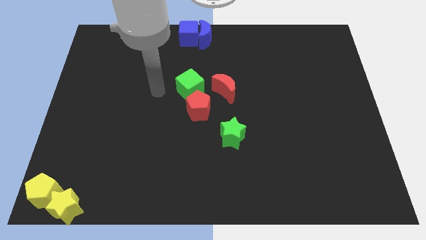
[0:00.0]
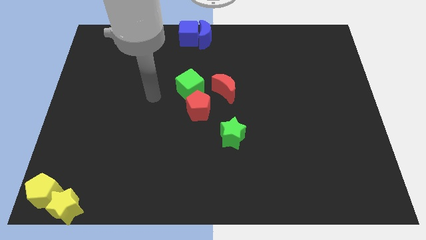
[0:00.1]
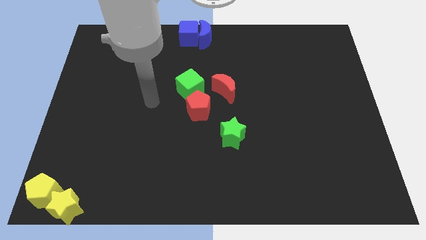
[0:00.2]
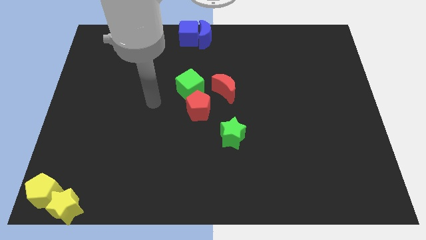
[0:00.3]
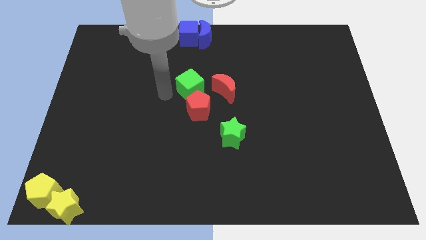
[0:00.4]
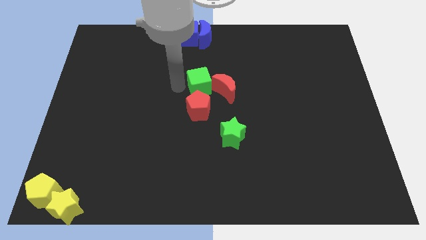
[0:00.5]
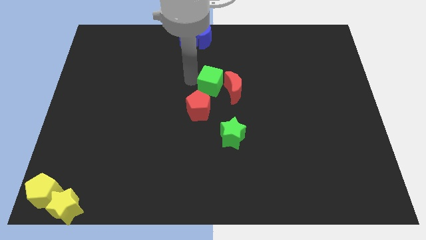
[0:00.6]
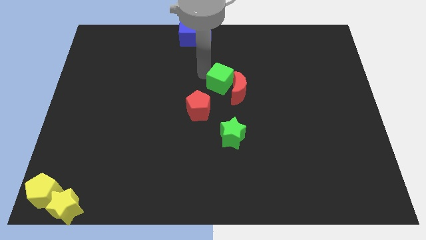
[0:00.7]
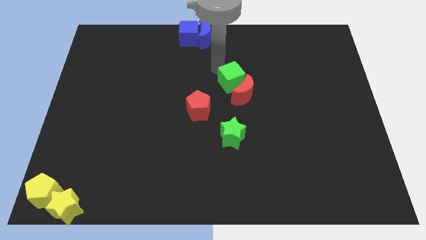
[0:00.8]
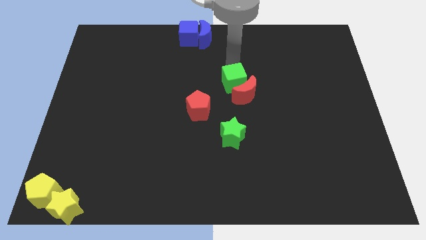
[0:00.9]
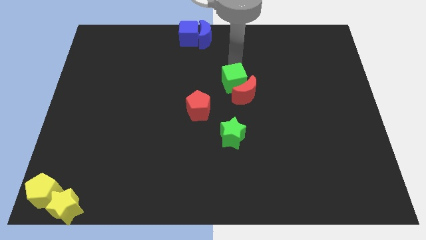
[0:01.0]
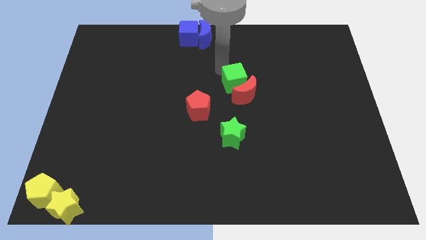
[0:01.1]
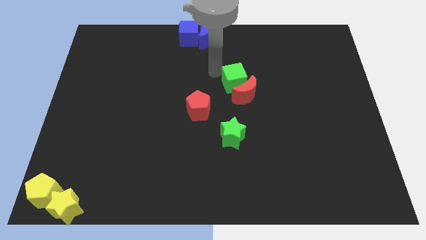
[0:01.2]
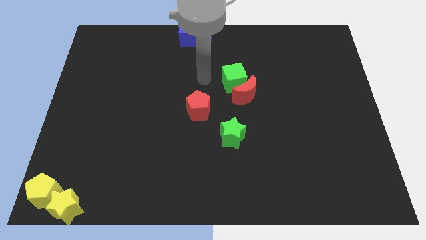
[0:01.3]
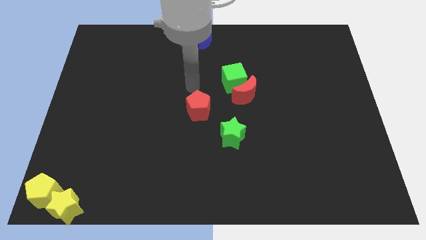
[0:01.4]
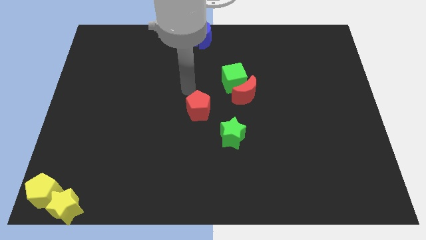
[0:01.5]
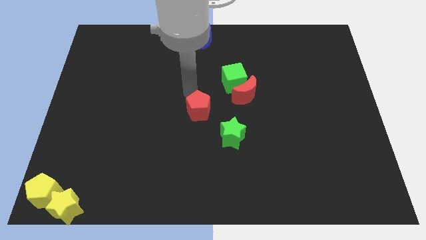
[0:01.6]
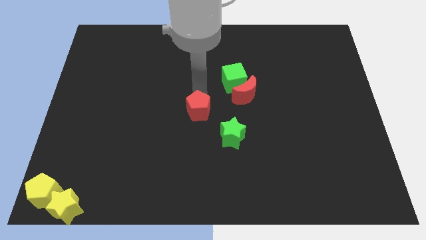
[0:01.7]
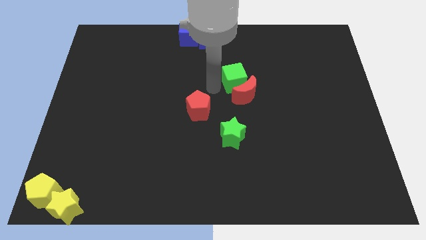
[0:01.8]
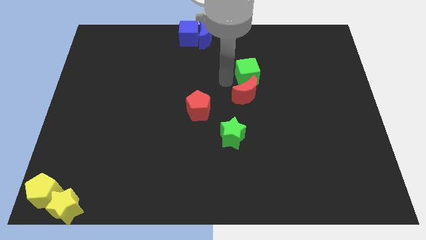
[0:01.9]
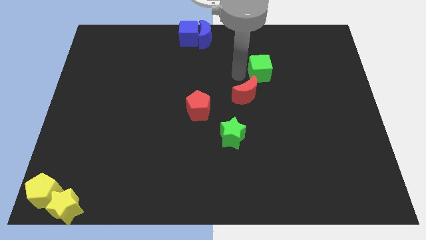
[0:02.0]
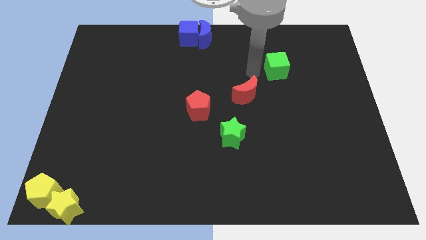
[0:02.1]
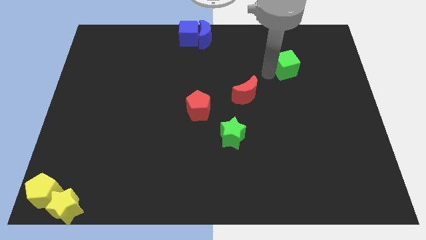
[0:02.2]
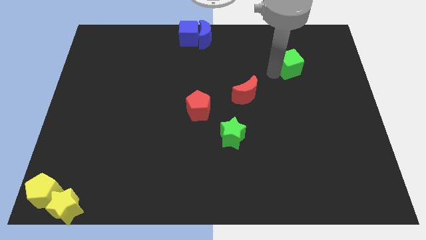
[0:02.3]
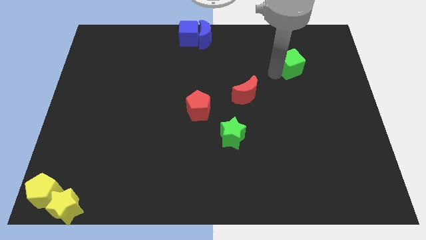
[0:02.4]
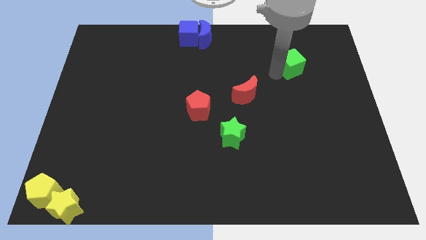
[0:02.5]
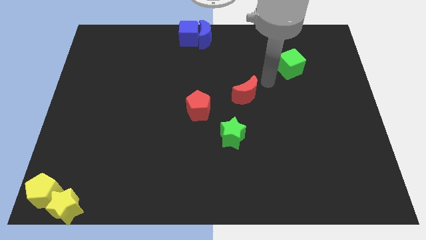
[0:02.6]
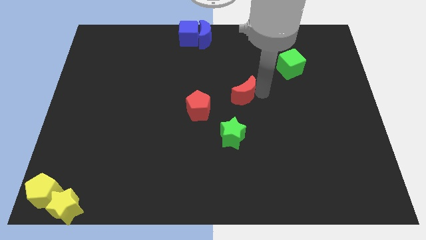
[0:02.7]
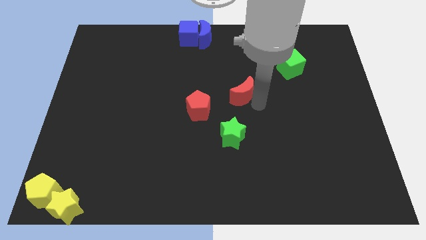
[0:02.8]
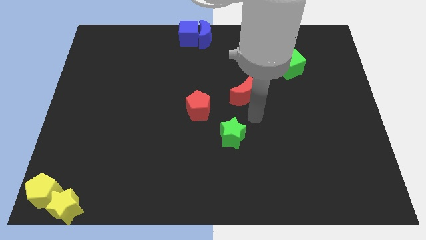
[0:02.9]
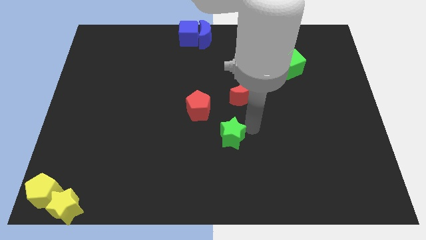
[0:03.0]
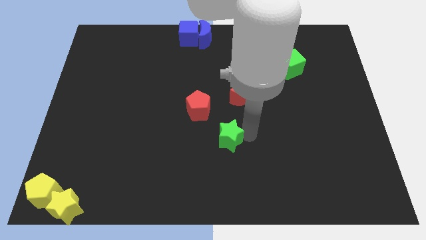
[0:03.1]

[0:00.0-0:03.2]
move the green cube to the top right

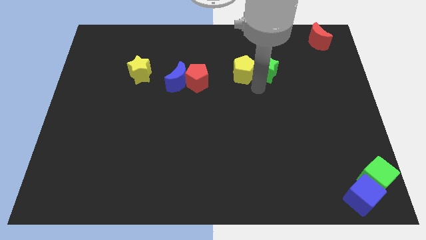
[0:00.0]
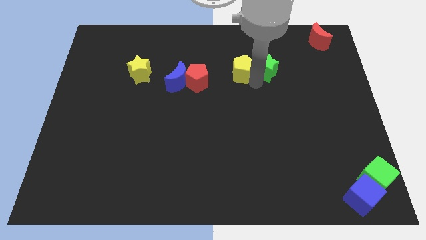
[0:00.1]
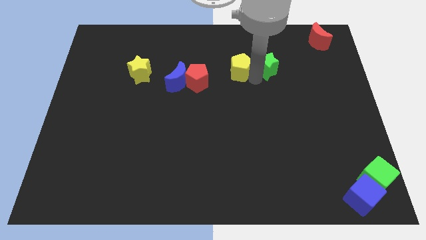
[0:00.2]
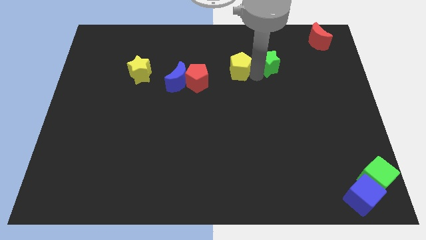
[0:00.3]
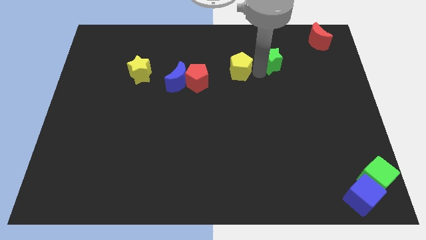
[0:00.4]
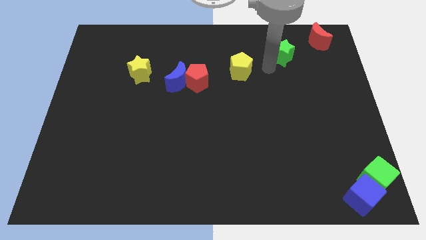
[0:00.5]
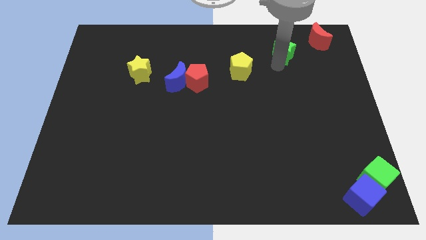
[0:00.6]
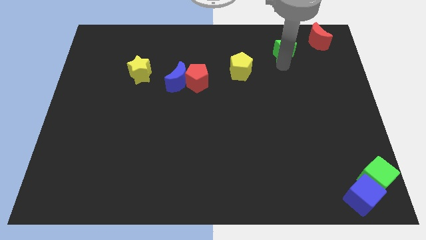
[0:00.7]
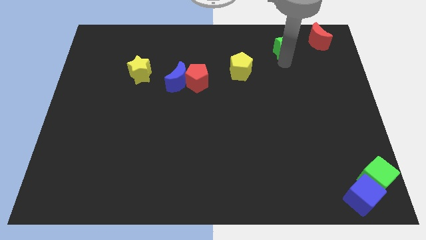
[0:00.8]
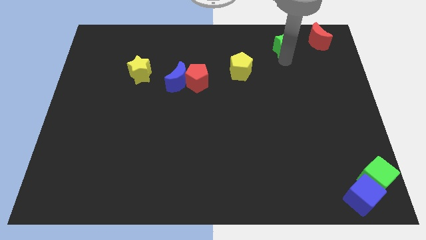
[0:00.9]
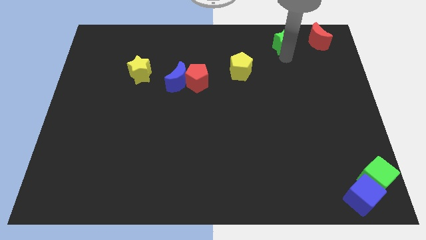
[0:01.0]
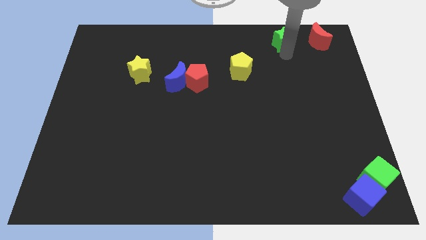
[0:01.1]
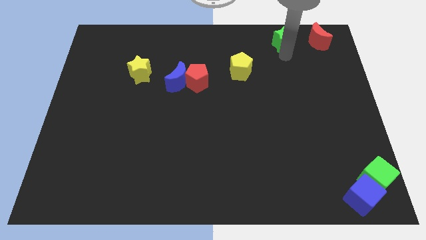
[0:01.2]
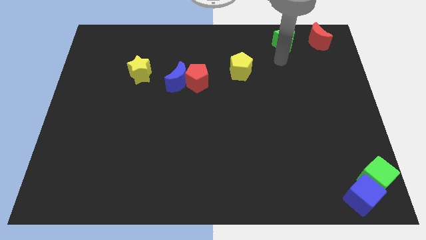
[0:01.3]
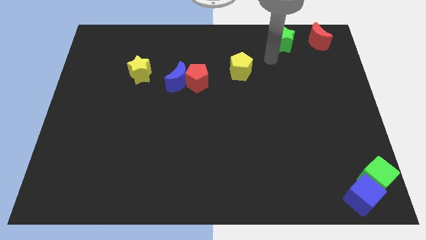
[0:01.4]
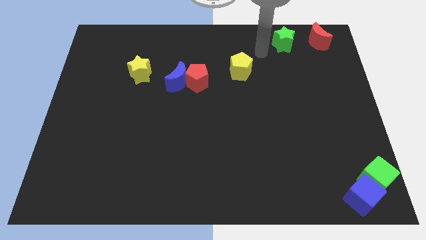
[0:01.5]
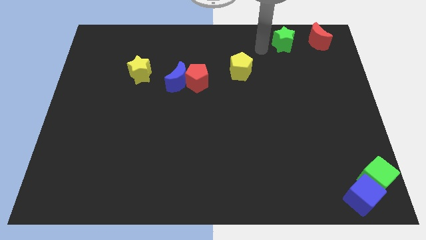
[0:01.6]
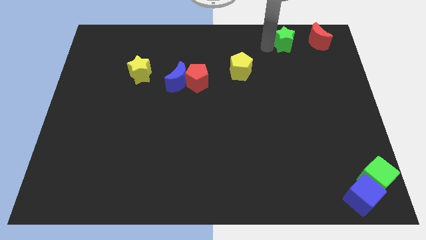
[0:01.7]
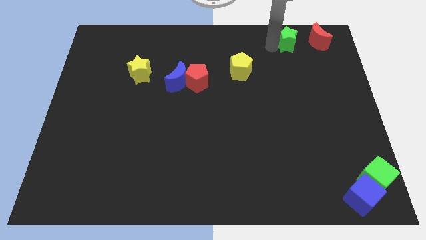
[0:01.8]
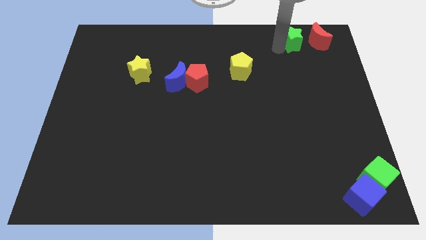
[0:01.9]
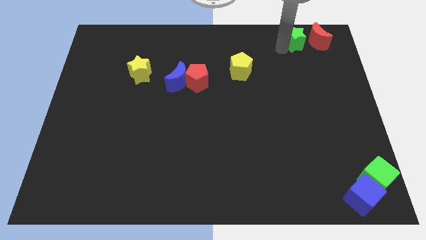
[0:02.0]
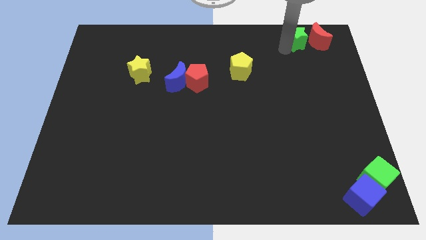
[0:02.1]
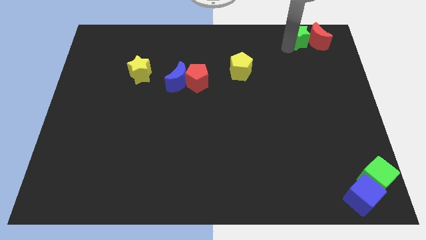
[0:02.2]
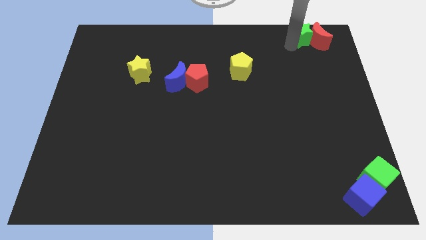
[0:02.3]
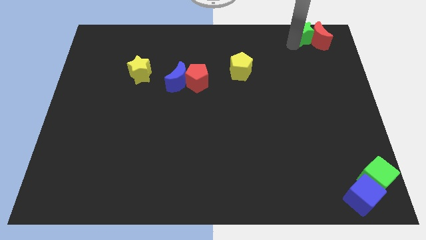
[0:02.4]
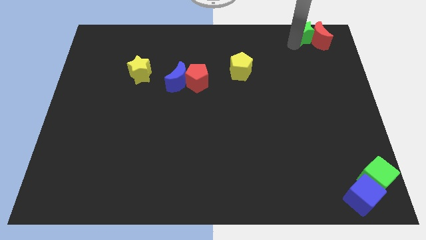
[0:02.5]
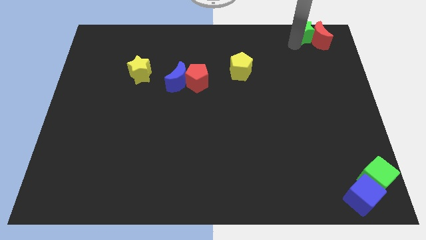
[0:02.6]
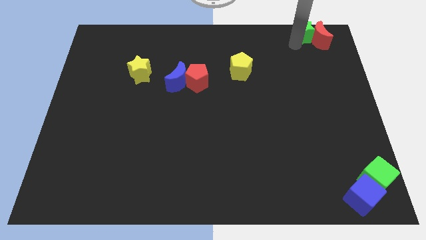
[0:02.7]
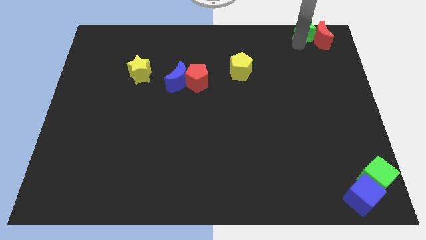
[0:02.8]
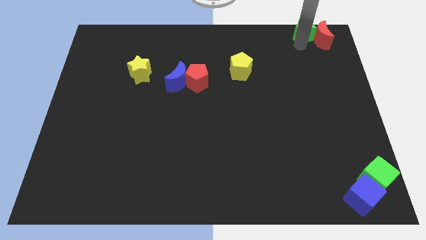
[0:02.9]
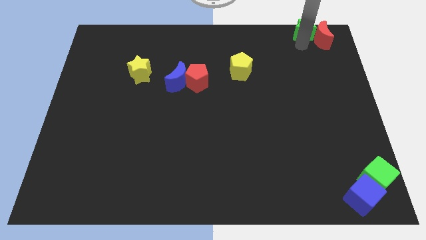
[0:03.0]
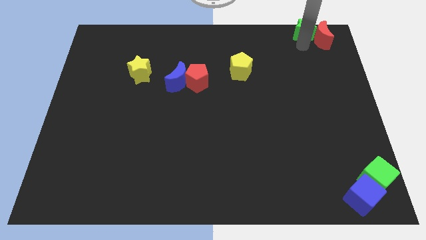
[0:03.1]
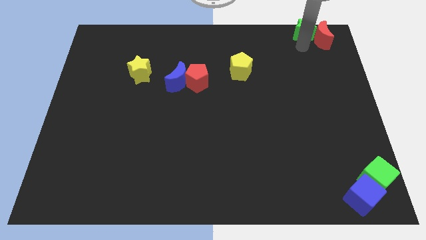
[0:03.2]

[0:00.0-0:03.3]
put the green star into the red crescent

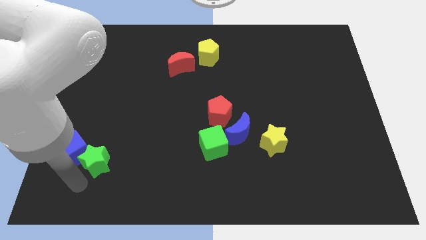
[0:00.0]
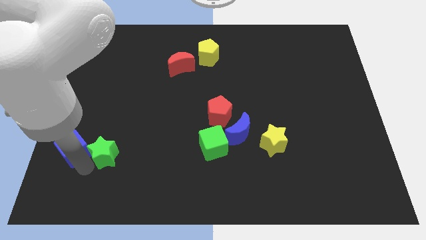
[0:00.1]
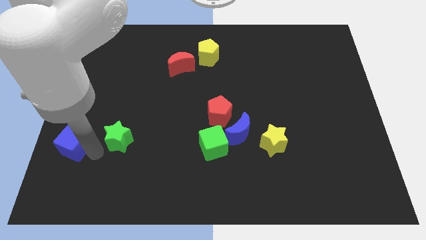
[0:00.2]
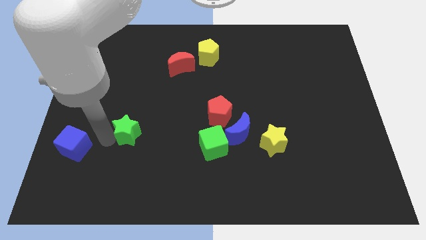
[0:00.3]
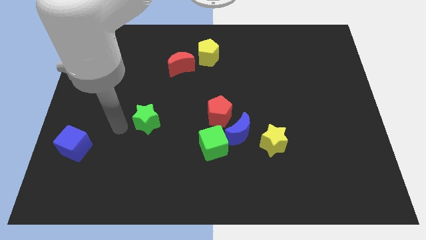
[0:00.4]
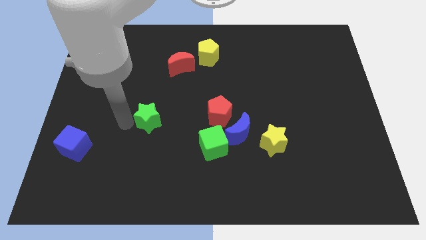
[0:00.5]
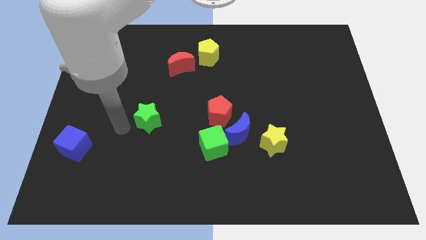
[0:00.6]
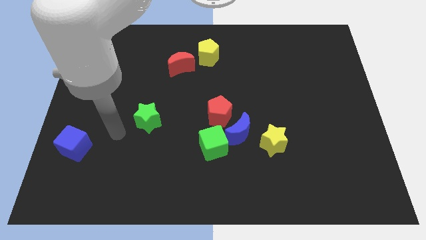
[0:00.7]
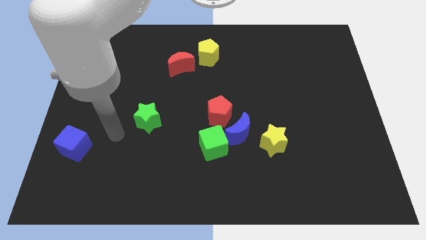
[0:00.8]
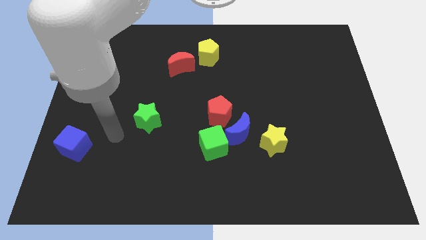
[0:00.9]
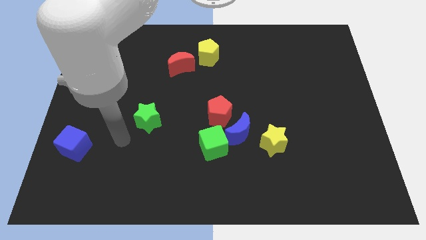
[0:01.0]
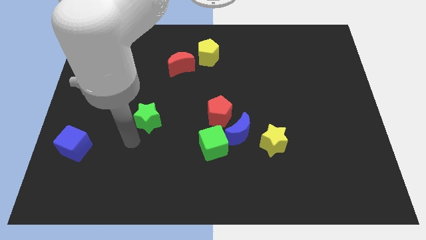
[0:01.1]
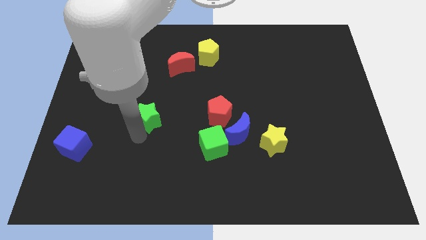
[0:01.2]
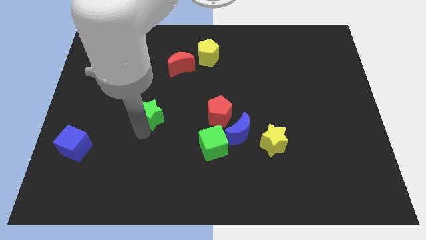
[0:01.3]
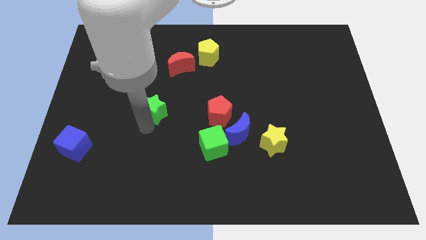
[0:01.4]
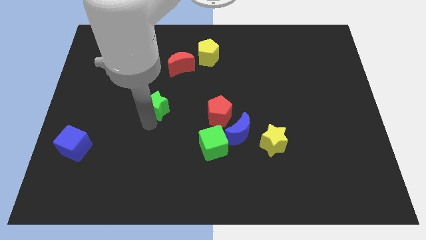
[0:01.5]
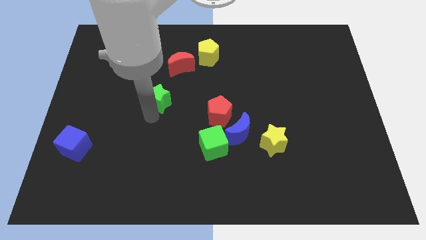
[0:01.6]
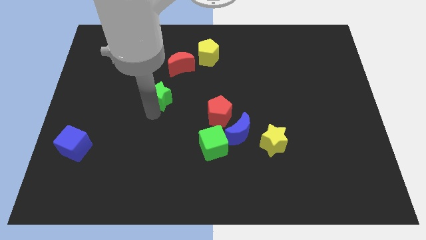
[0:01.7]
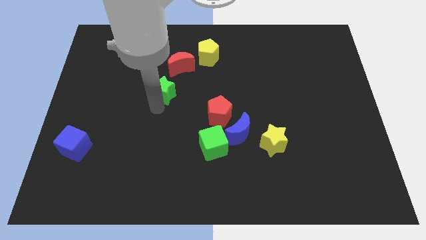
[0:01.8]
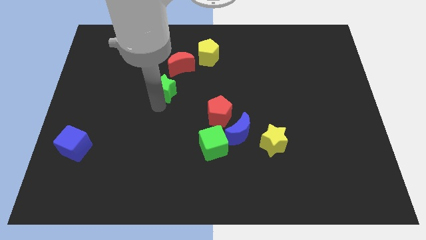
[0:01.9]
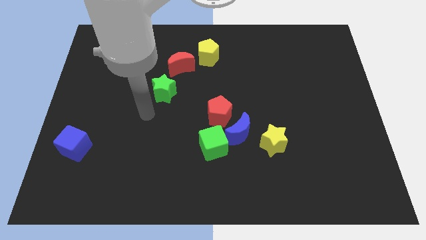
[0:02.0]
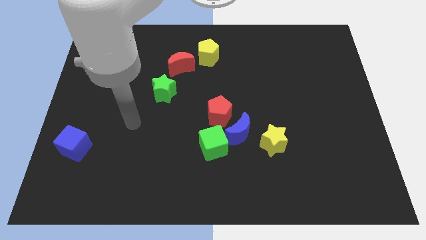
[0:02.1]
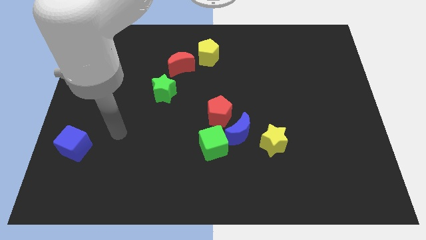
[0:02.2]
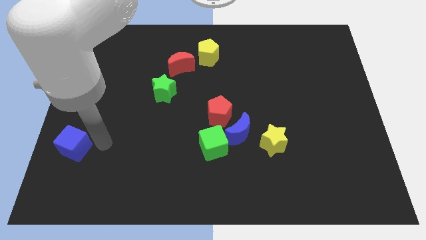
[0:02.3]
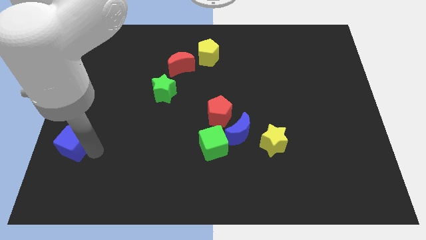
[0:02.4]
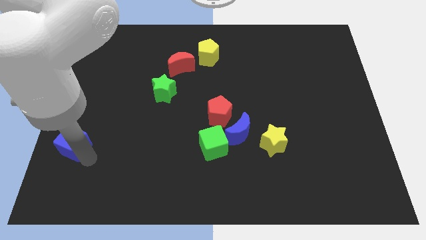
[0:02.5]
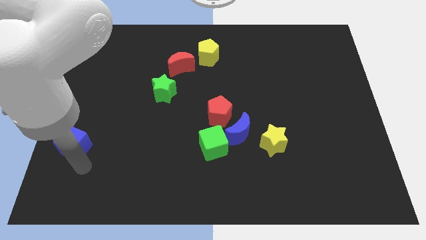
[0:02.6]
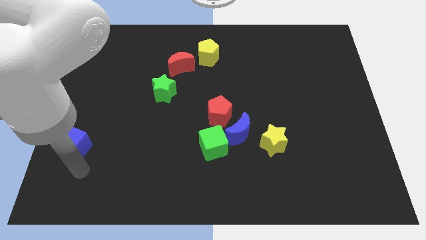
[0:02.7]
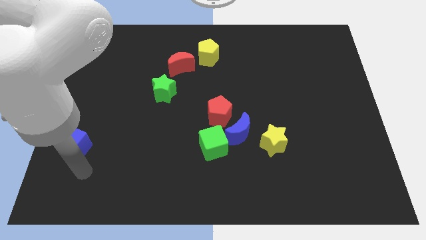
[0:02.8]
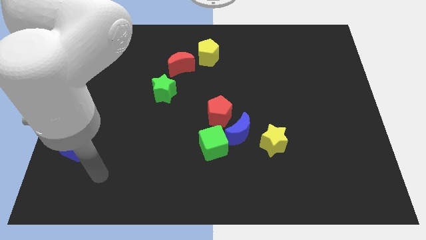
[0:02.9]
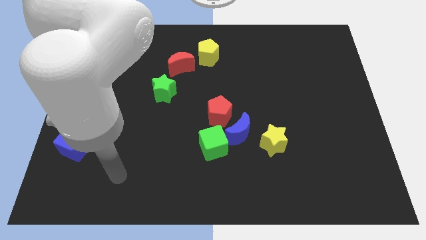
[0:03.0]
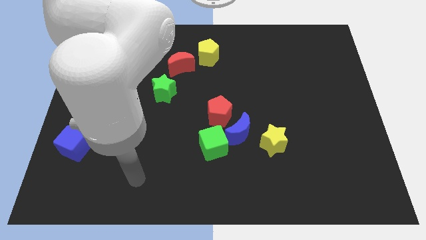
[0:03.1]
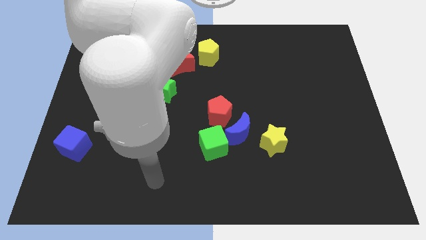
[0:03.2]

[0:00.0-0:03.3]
place the green star at the bottom left of the red moon
